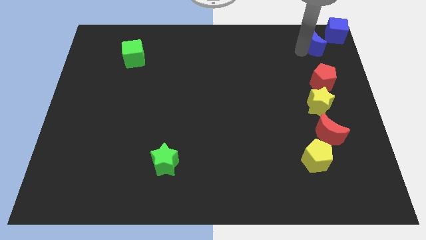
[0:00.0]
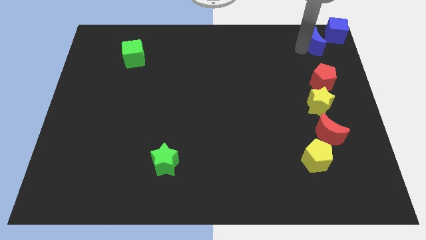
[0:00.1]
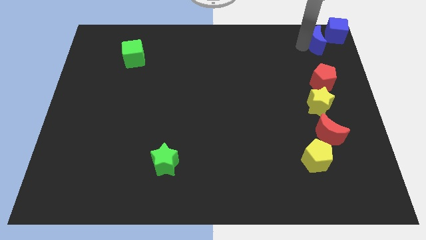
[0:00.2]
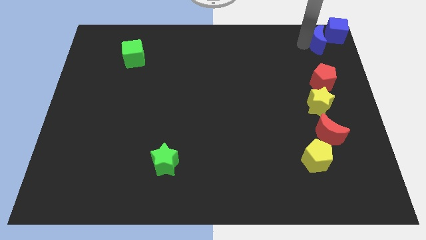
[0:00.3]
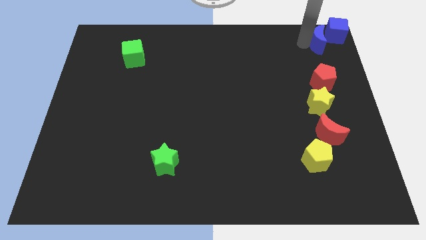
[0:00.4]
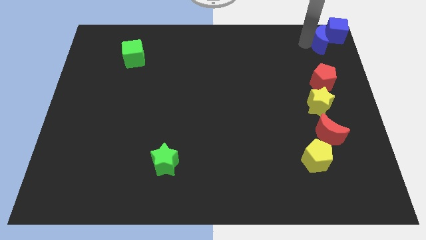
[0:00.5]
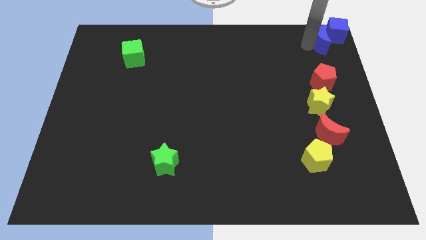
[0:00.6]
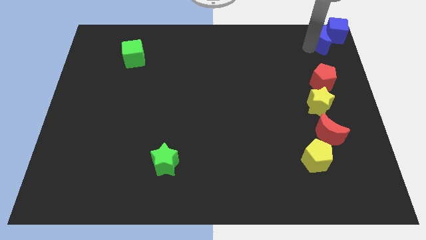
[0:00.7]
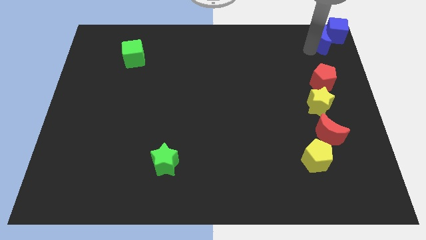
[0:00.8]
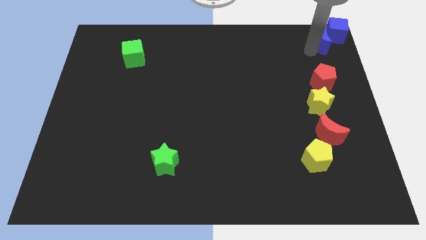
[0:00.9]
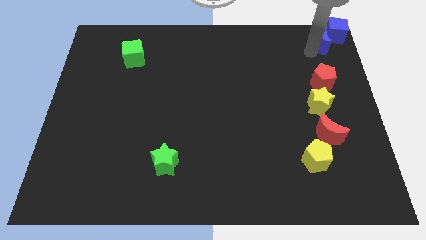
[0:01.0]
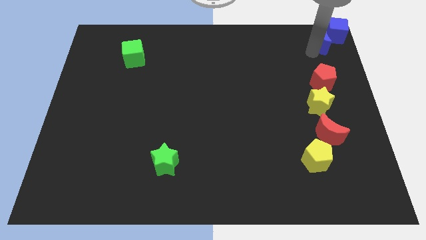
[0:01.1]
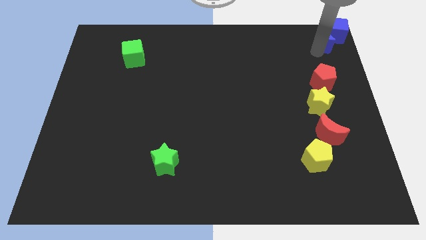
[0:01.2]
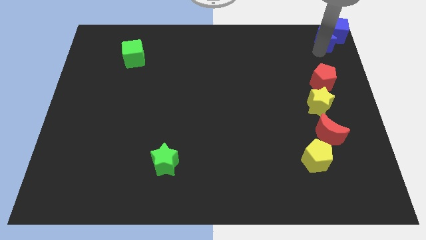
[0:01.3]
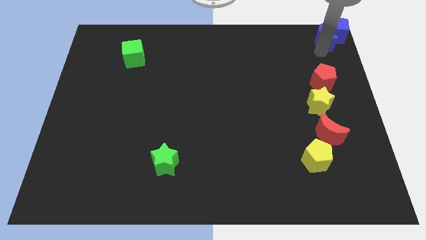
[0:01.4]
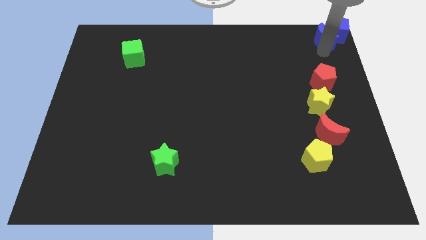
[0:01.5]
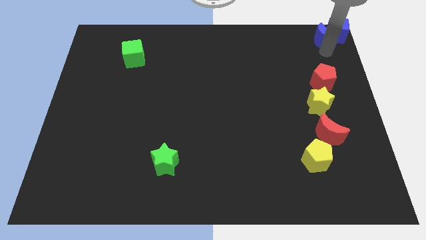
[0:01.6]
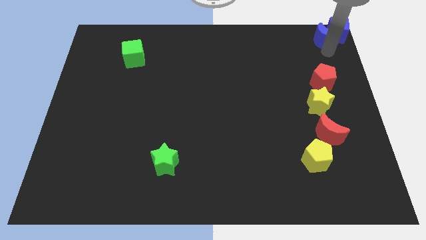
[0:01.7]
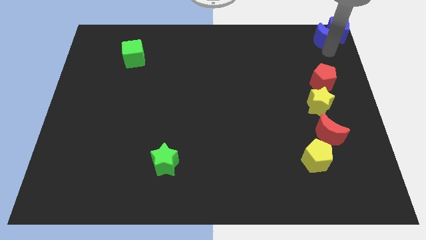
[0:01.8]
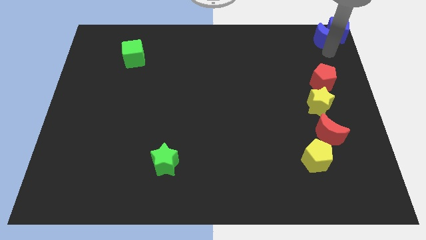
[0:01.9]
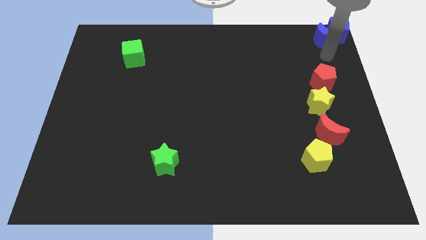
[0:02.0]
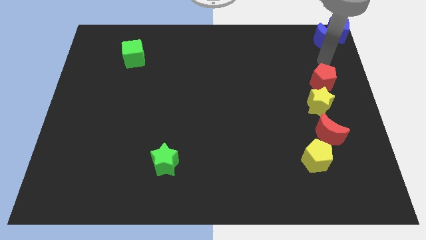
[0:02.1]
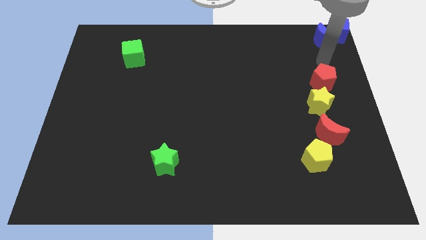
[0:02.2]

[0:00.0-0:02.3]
move the blue crescent into the blue cube

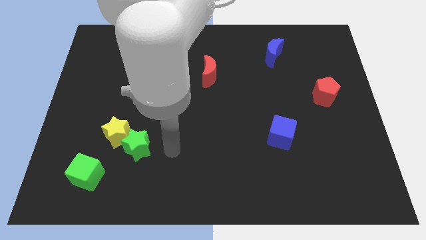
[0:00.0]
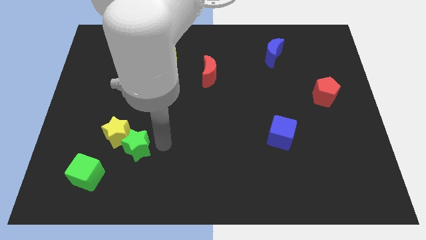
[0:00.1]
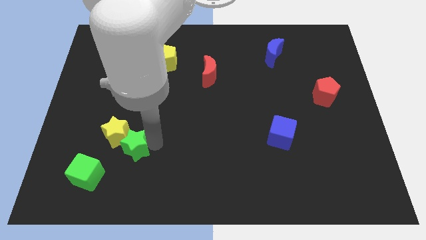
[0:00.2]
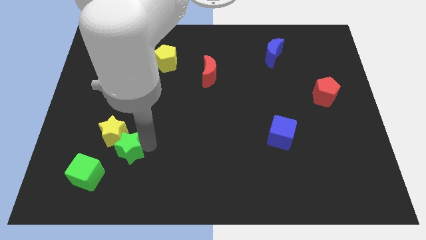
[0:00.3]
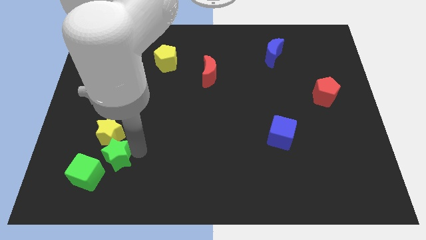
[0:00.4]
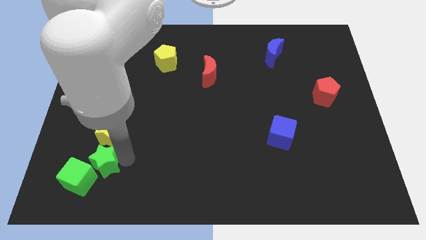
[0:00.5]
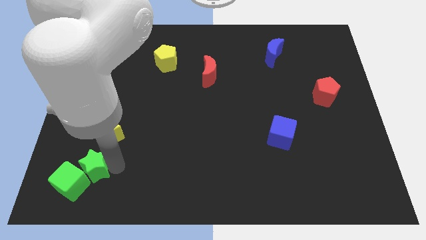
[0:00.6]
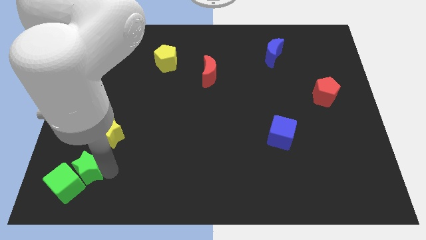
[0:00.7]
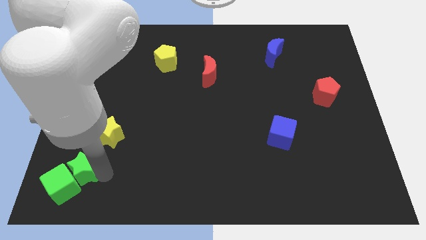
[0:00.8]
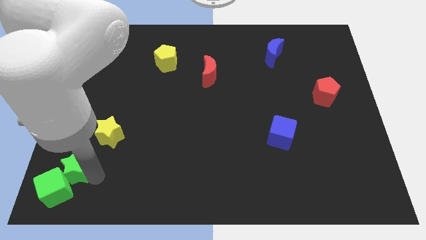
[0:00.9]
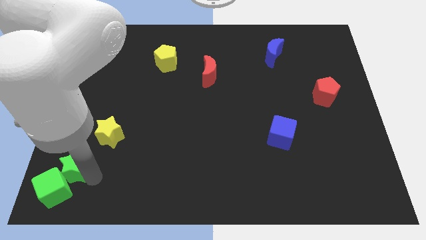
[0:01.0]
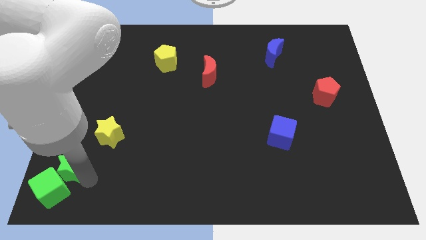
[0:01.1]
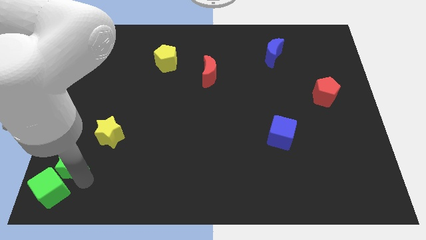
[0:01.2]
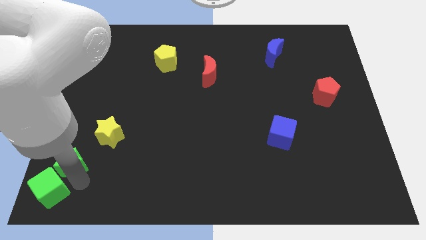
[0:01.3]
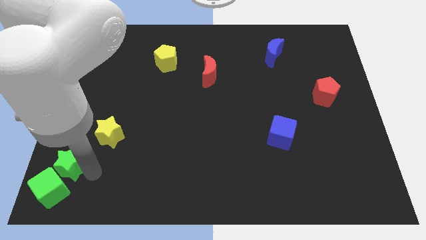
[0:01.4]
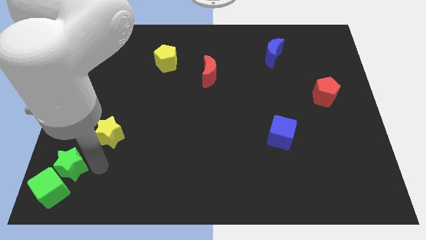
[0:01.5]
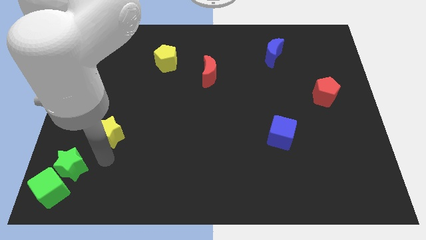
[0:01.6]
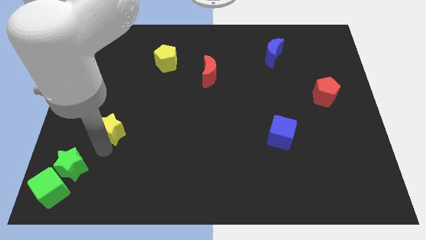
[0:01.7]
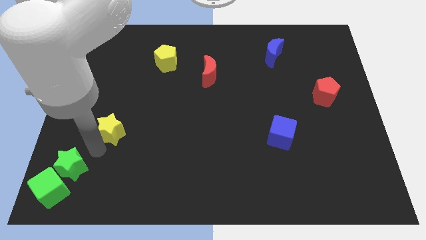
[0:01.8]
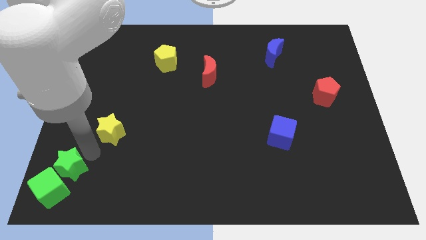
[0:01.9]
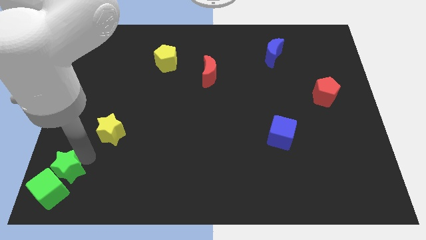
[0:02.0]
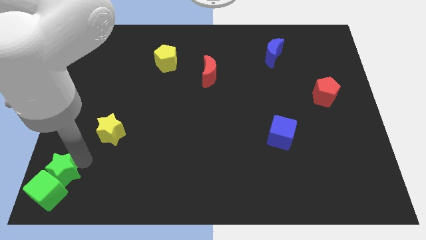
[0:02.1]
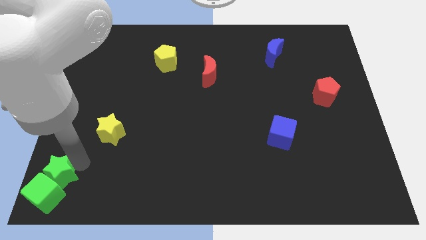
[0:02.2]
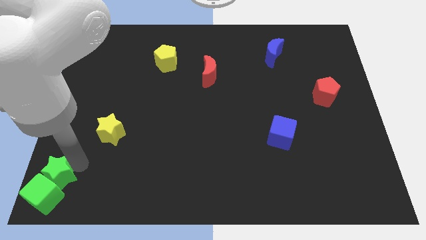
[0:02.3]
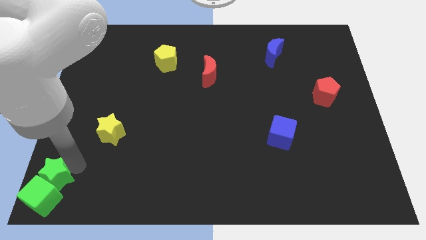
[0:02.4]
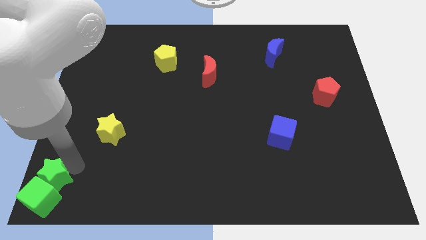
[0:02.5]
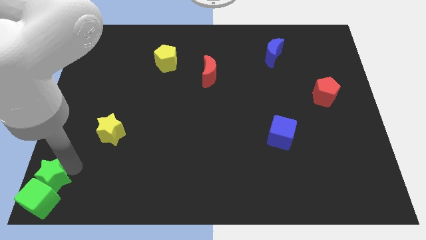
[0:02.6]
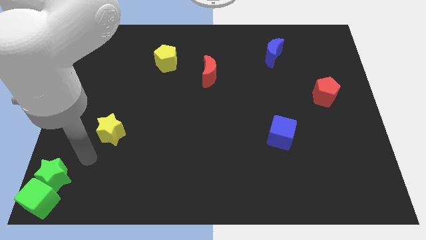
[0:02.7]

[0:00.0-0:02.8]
seperate the green star away form the yellow star

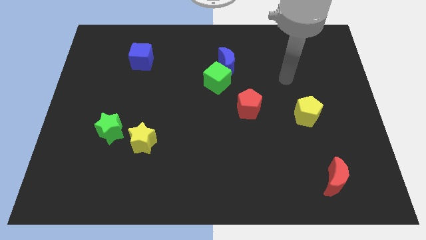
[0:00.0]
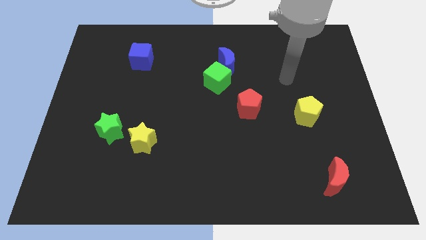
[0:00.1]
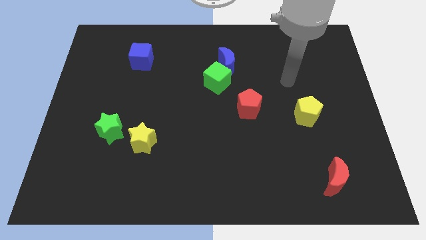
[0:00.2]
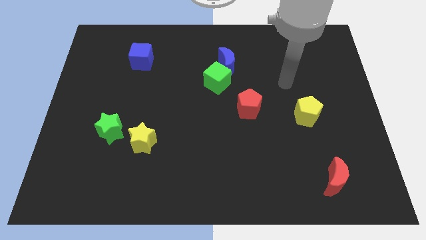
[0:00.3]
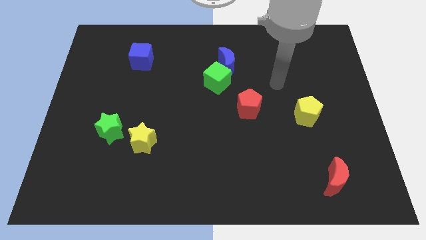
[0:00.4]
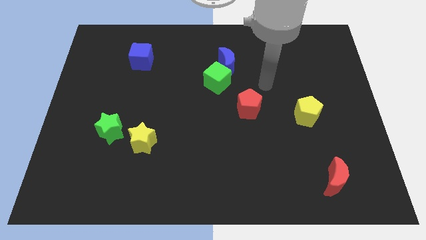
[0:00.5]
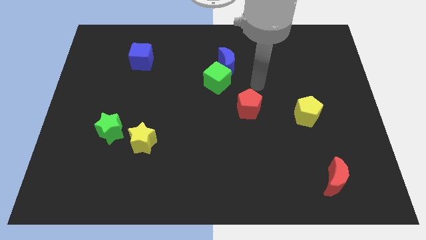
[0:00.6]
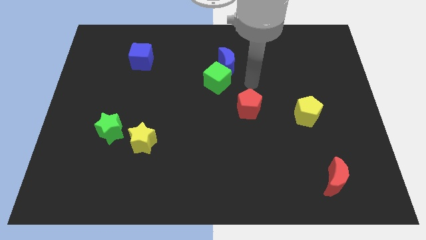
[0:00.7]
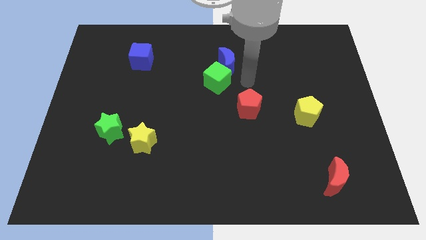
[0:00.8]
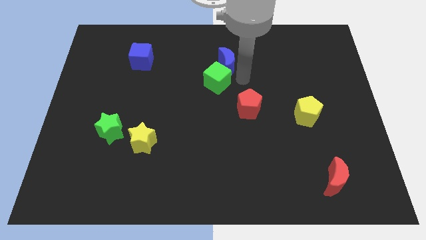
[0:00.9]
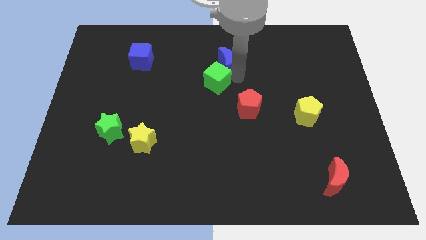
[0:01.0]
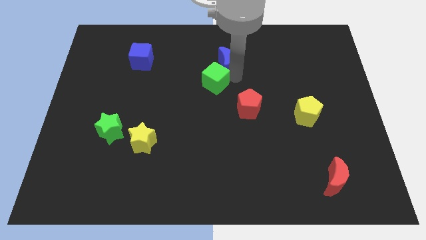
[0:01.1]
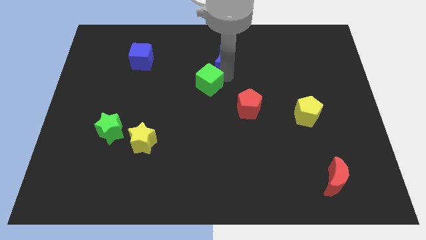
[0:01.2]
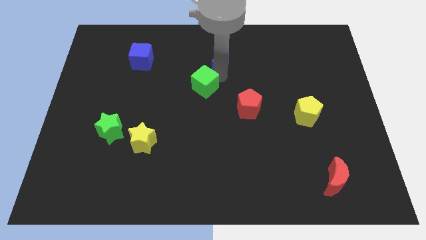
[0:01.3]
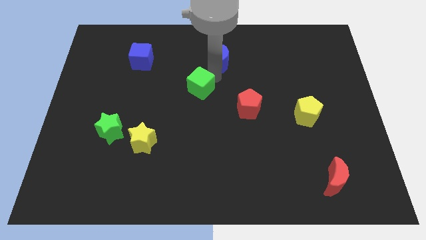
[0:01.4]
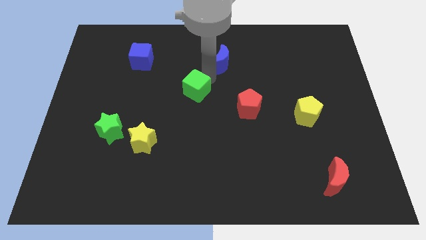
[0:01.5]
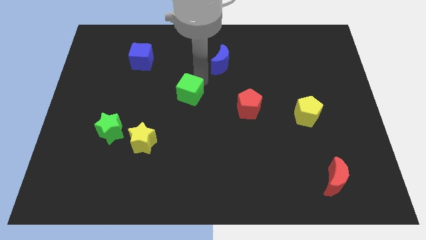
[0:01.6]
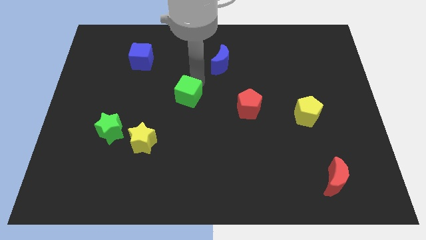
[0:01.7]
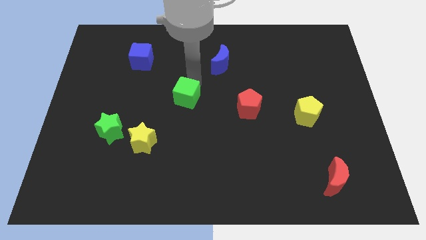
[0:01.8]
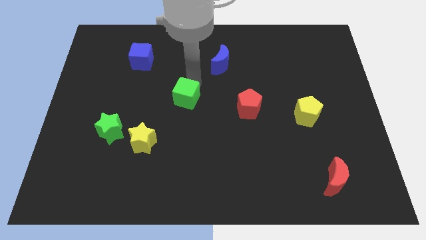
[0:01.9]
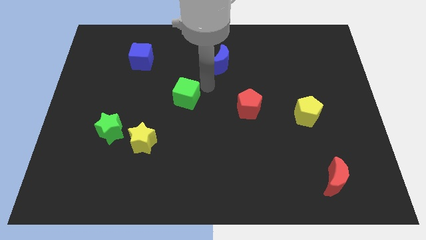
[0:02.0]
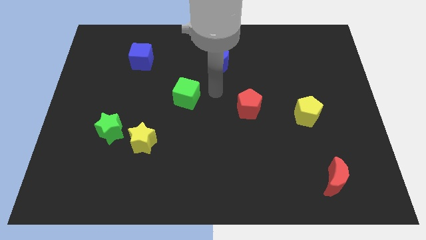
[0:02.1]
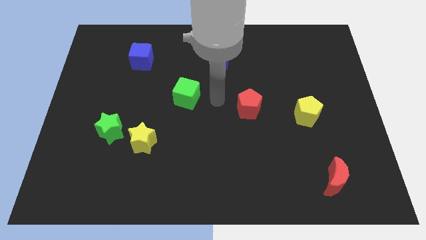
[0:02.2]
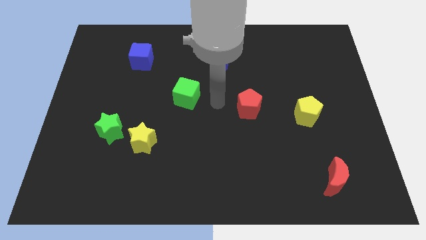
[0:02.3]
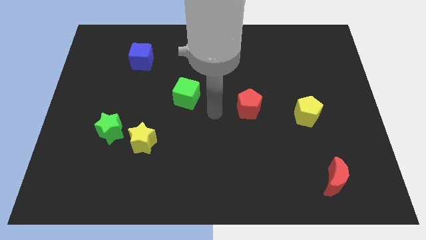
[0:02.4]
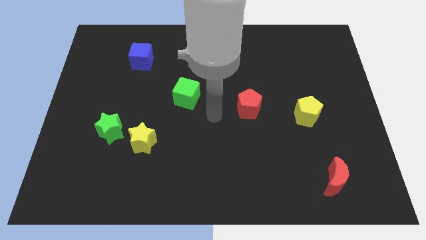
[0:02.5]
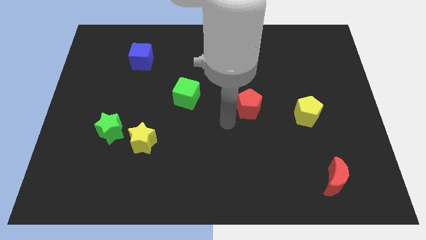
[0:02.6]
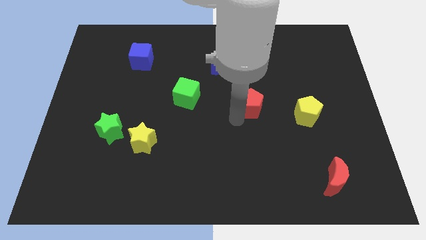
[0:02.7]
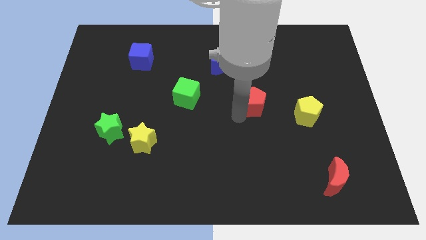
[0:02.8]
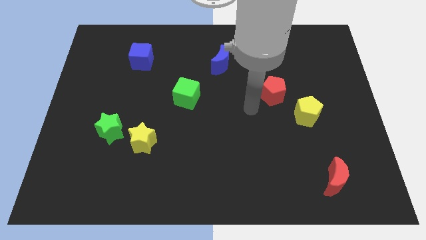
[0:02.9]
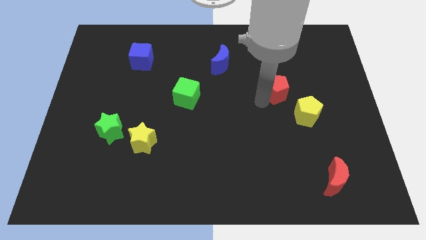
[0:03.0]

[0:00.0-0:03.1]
slightly move the green cube towards the center of the board

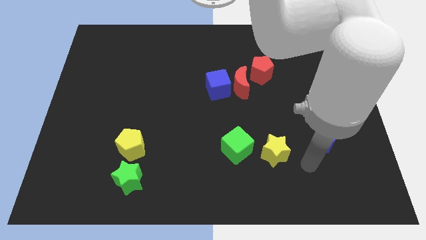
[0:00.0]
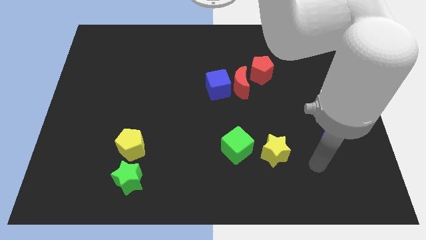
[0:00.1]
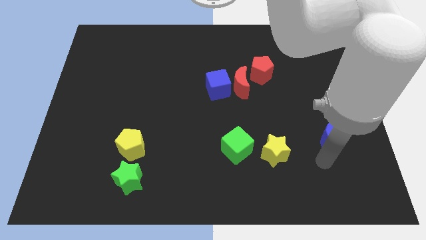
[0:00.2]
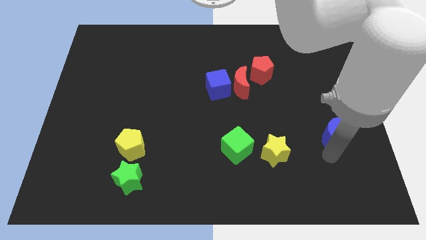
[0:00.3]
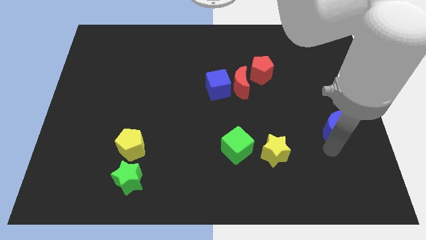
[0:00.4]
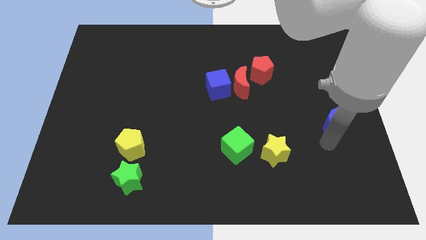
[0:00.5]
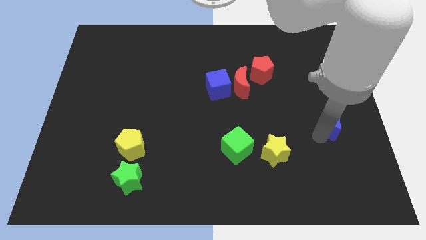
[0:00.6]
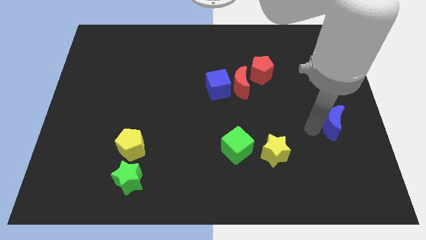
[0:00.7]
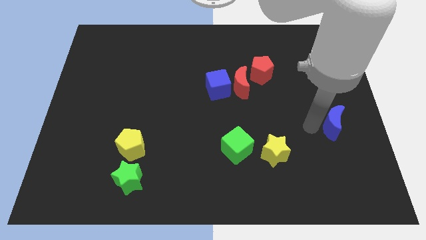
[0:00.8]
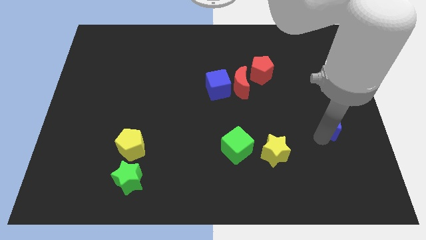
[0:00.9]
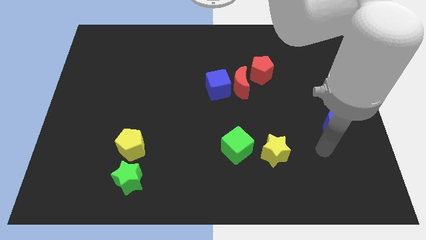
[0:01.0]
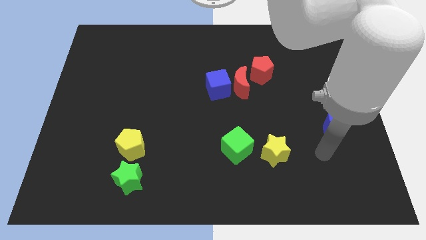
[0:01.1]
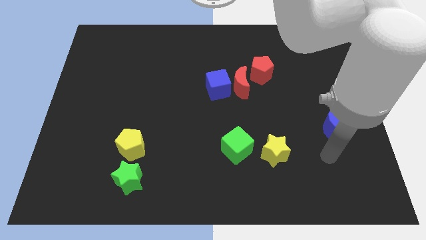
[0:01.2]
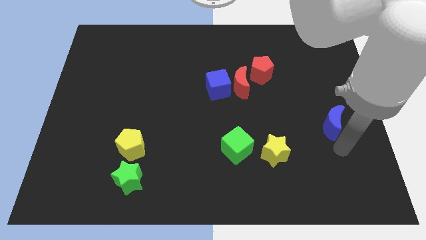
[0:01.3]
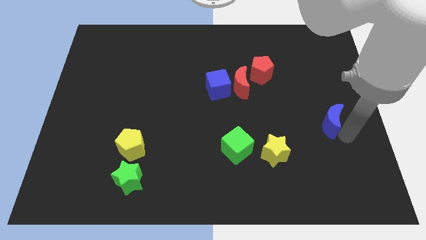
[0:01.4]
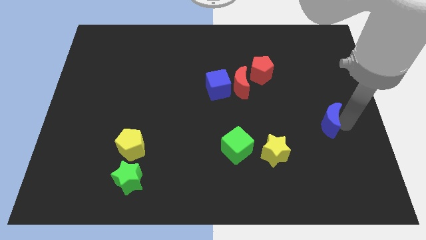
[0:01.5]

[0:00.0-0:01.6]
move the blue moon towards the center left
